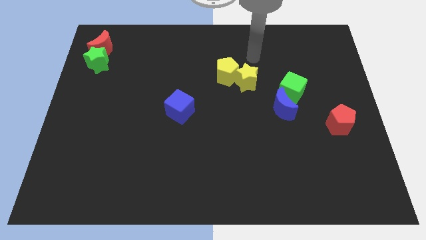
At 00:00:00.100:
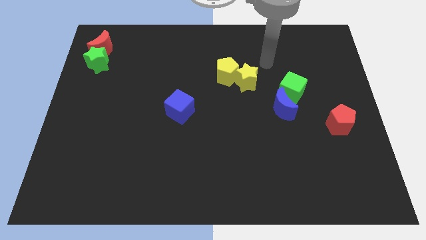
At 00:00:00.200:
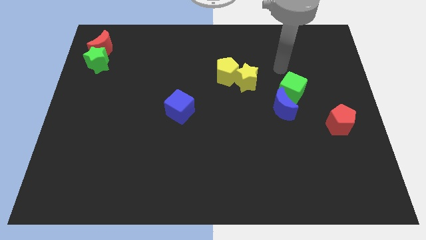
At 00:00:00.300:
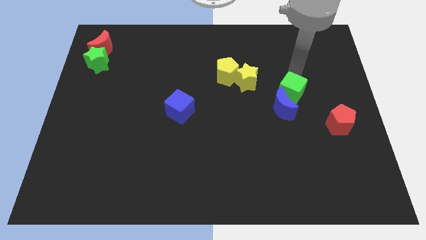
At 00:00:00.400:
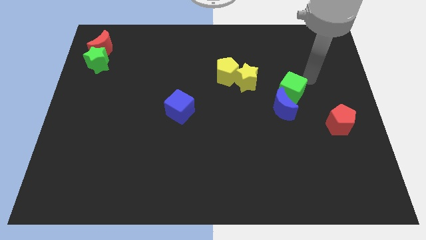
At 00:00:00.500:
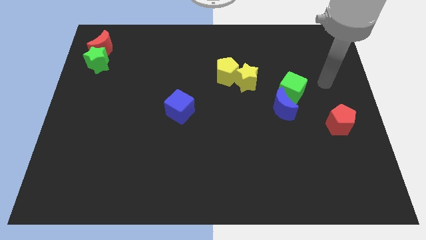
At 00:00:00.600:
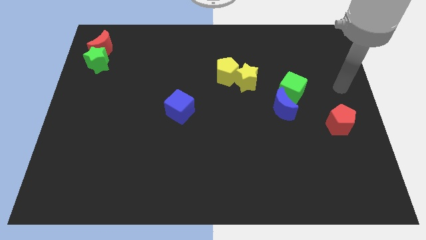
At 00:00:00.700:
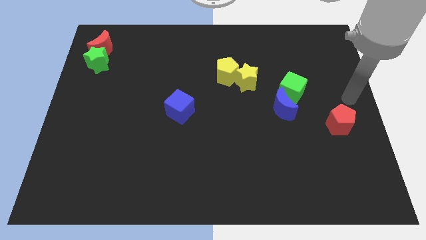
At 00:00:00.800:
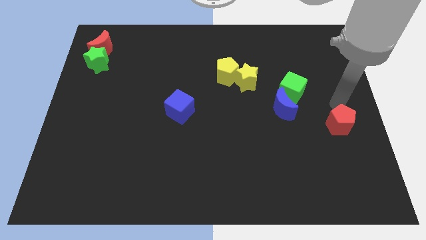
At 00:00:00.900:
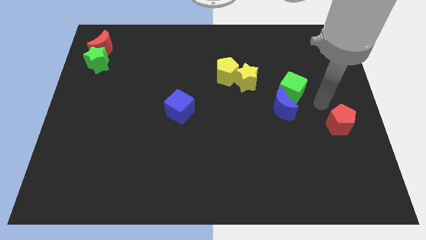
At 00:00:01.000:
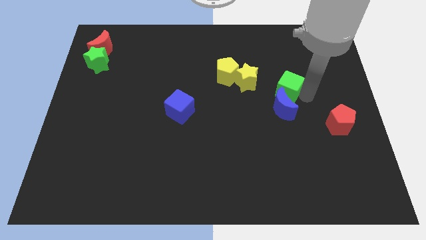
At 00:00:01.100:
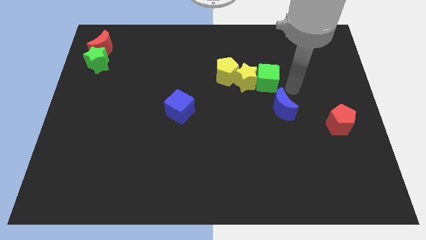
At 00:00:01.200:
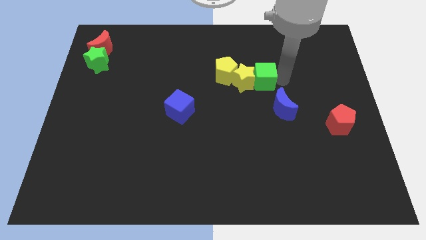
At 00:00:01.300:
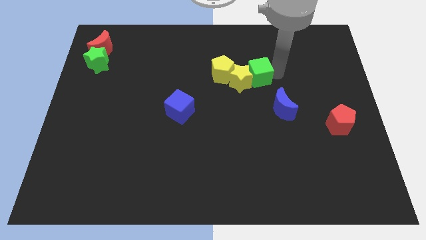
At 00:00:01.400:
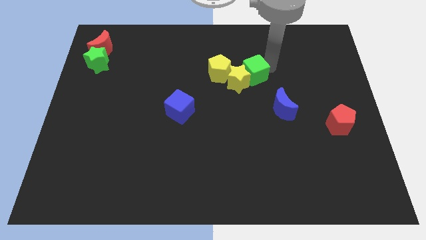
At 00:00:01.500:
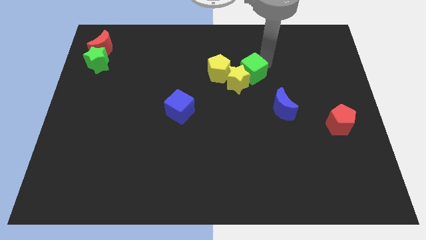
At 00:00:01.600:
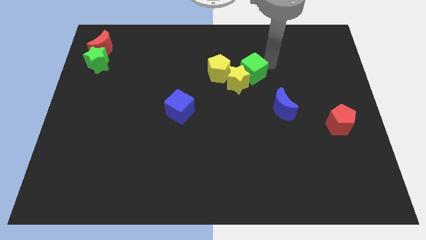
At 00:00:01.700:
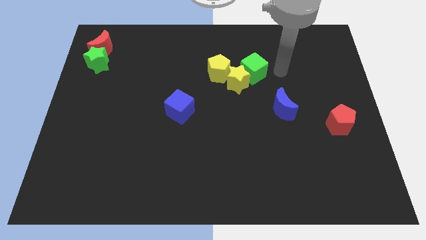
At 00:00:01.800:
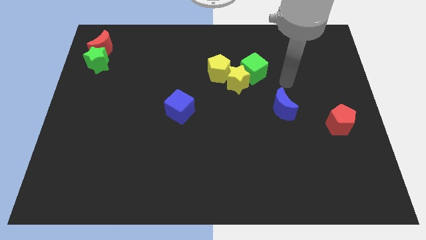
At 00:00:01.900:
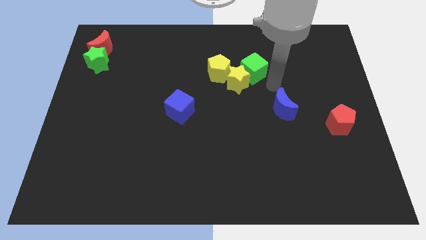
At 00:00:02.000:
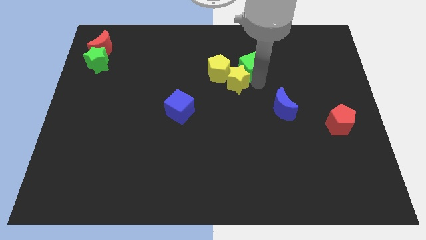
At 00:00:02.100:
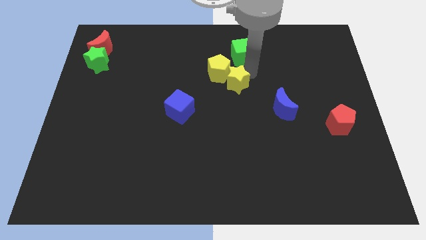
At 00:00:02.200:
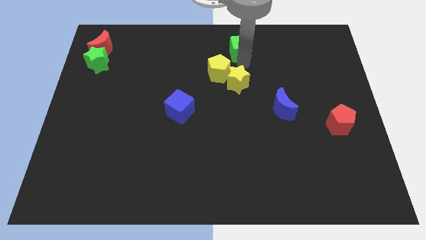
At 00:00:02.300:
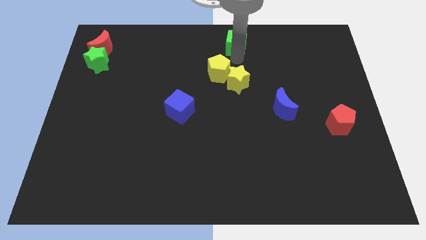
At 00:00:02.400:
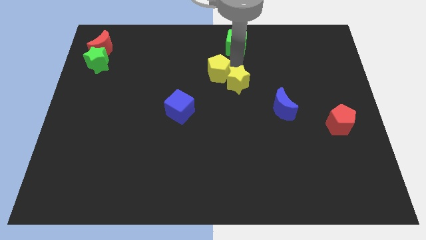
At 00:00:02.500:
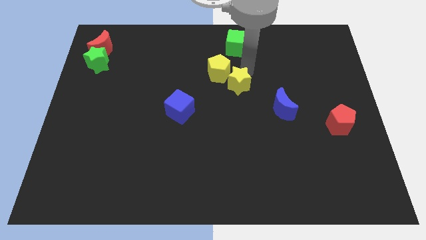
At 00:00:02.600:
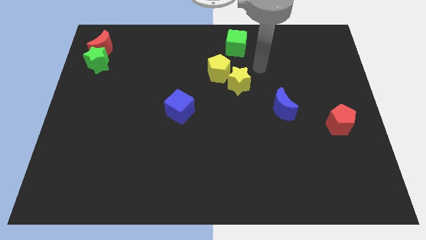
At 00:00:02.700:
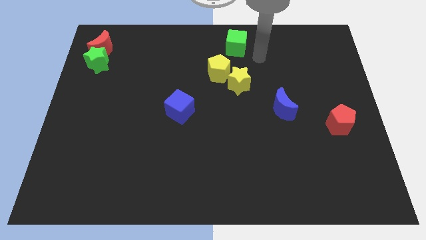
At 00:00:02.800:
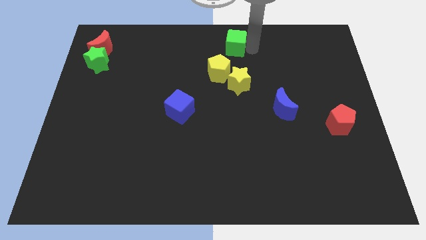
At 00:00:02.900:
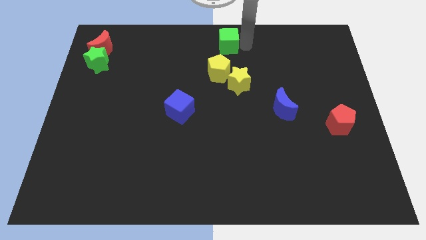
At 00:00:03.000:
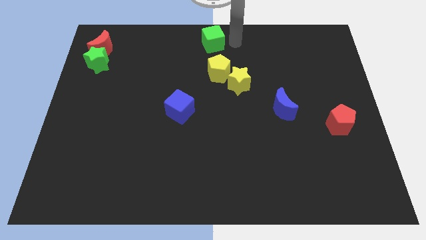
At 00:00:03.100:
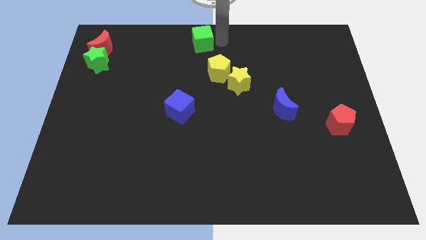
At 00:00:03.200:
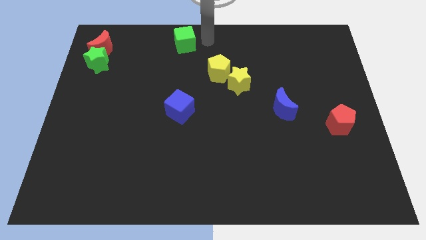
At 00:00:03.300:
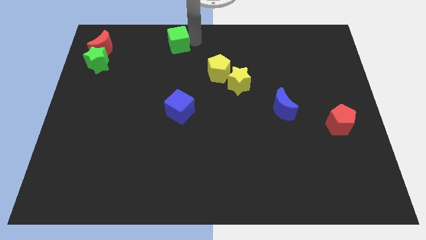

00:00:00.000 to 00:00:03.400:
push the green cube to the left of the red crescent

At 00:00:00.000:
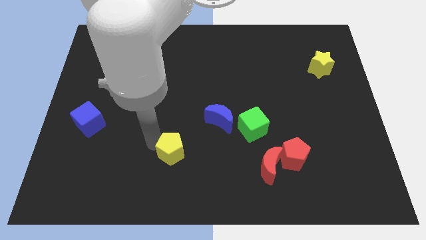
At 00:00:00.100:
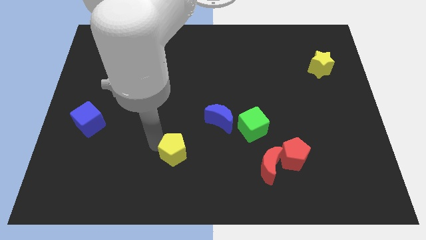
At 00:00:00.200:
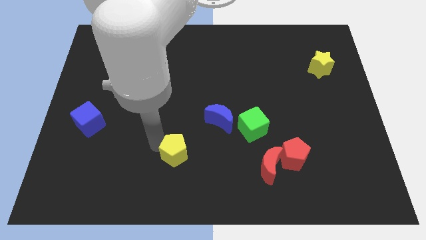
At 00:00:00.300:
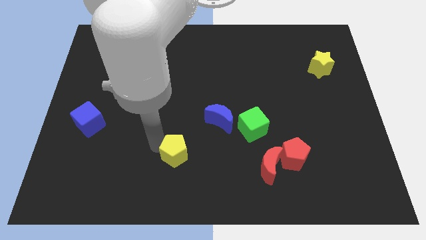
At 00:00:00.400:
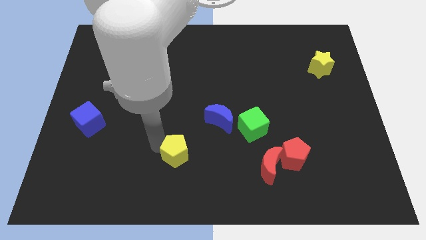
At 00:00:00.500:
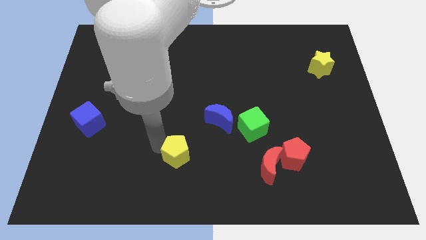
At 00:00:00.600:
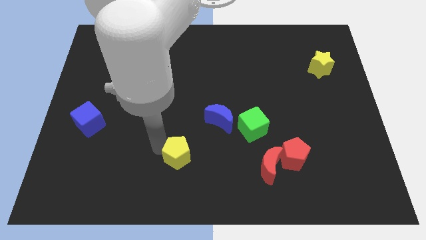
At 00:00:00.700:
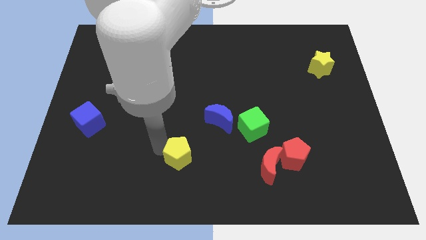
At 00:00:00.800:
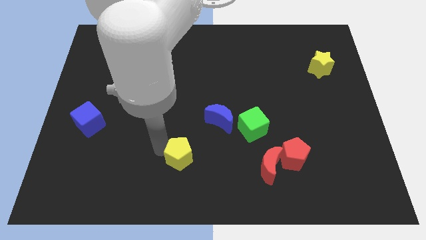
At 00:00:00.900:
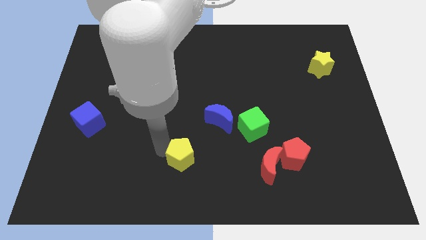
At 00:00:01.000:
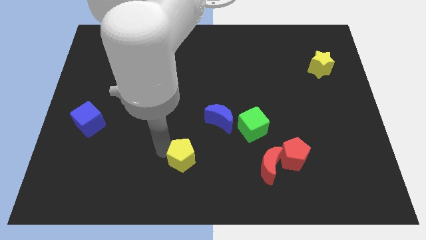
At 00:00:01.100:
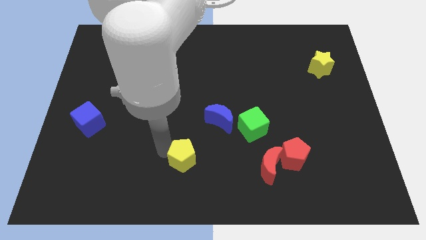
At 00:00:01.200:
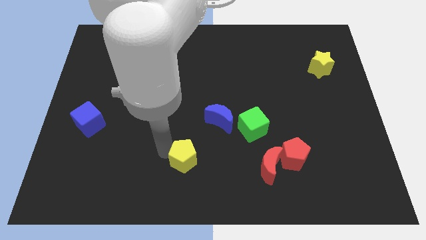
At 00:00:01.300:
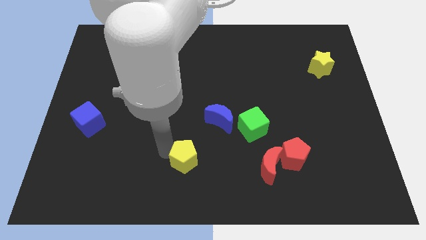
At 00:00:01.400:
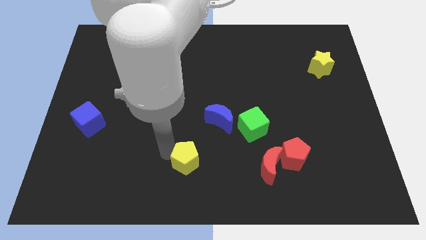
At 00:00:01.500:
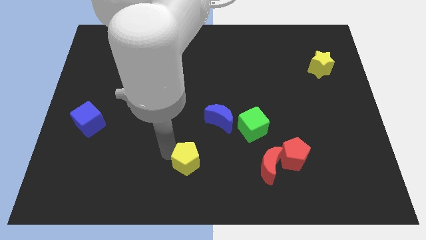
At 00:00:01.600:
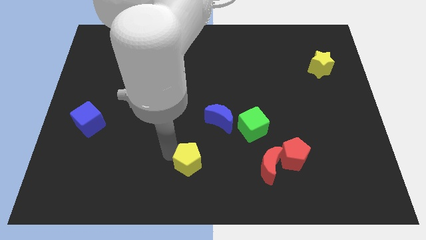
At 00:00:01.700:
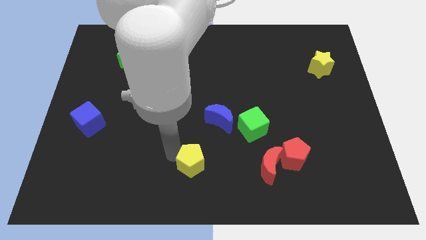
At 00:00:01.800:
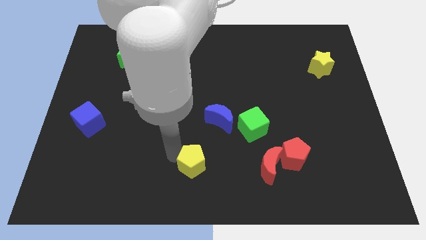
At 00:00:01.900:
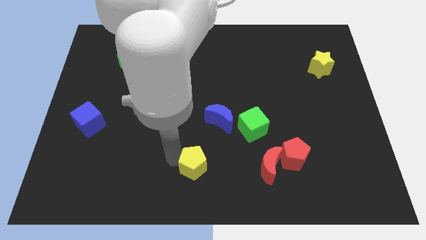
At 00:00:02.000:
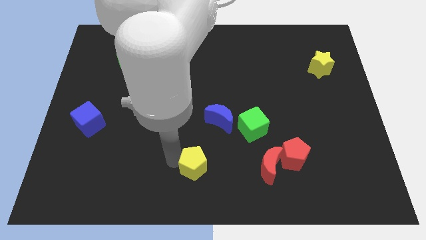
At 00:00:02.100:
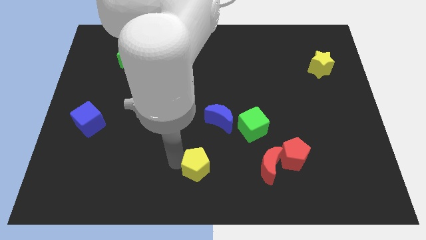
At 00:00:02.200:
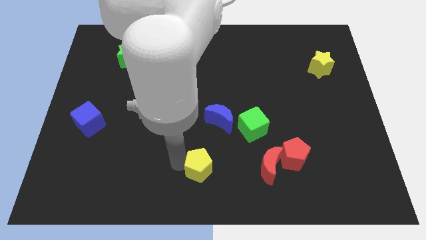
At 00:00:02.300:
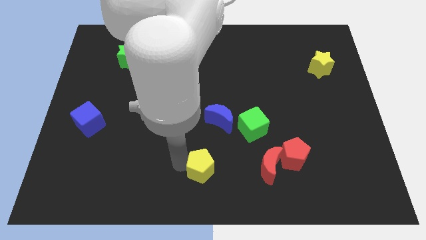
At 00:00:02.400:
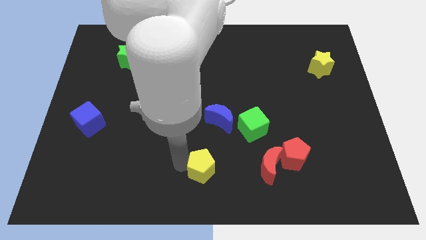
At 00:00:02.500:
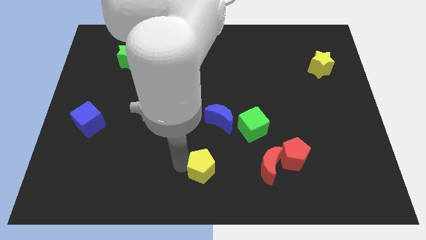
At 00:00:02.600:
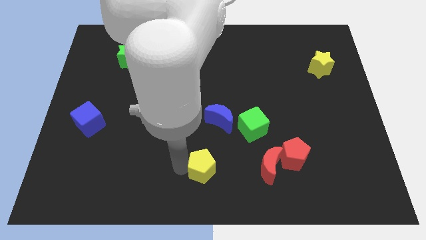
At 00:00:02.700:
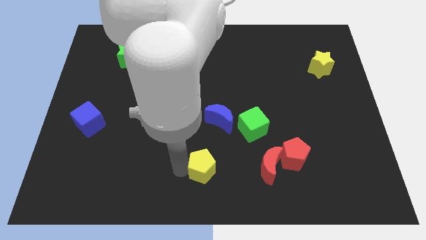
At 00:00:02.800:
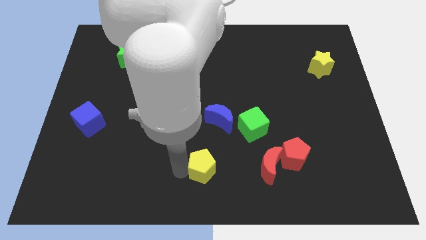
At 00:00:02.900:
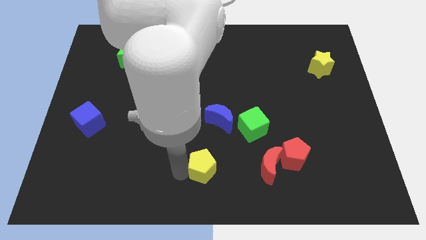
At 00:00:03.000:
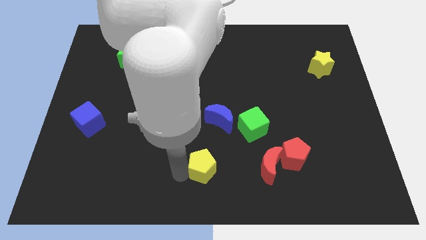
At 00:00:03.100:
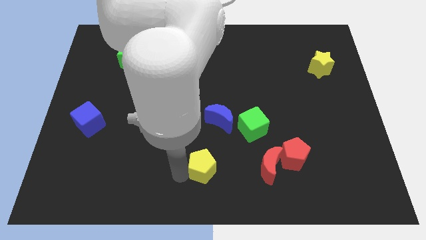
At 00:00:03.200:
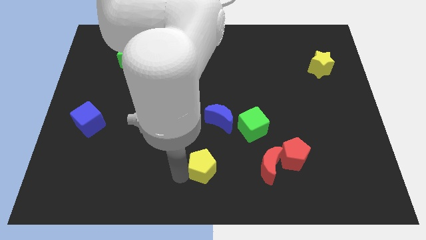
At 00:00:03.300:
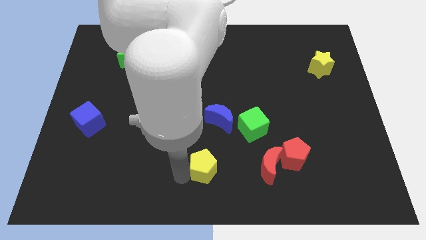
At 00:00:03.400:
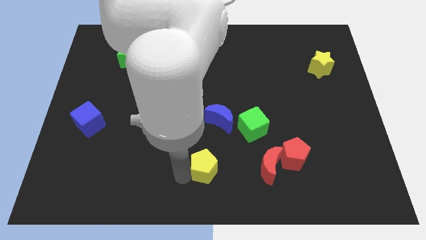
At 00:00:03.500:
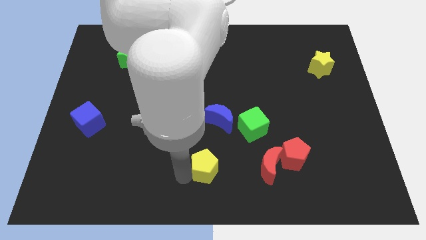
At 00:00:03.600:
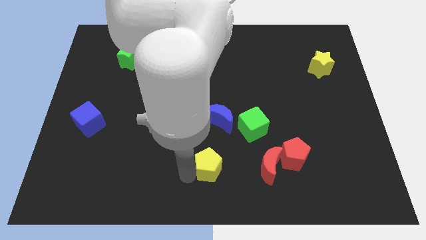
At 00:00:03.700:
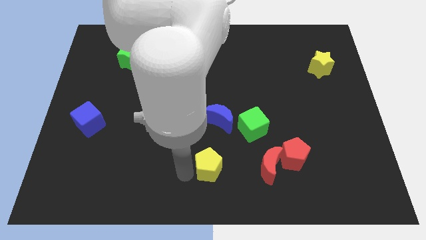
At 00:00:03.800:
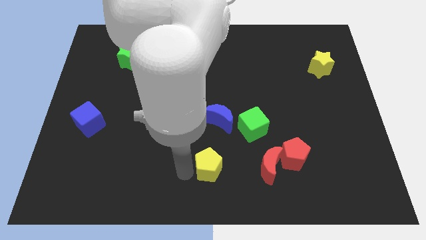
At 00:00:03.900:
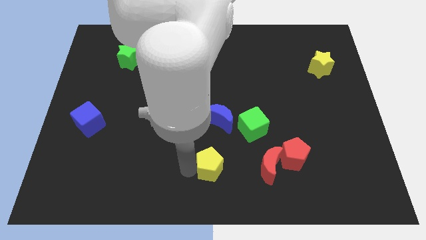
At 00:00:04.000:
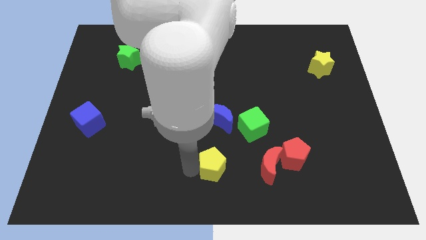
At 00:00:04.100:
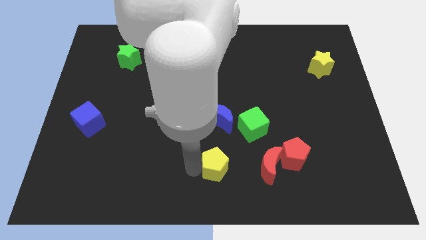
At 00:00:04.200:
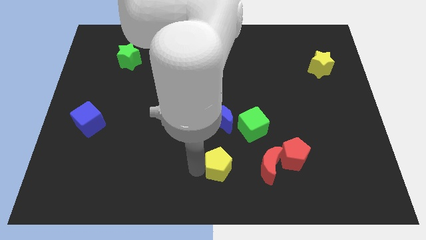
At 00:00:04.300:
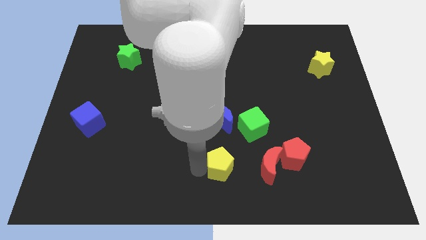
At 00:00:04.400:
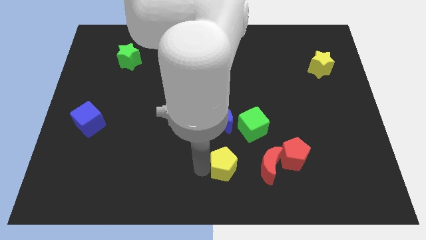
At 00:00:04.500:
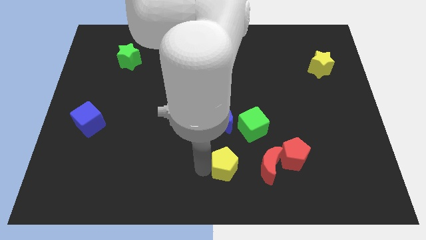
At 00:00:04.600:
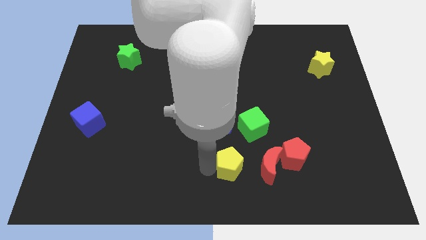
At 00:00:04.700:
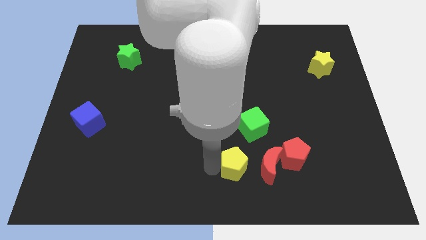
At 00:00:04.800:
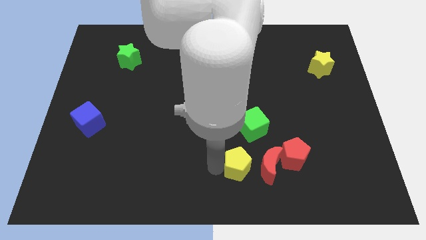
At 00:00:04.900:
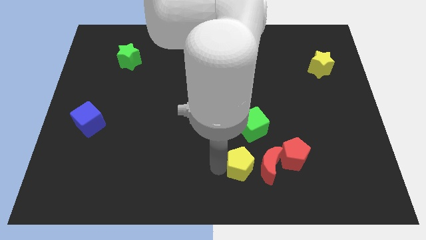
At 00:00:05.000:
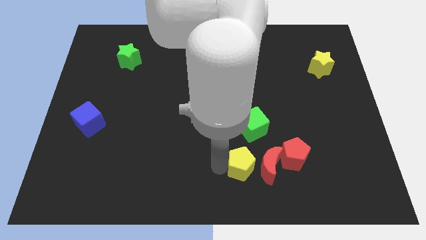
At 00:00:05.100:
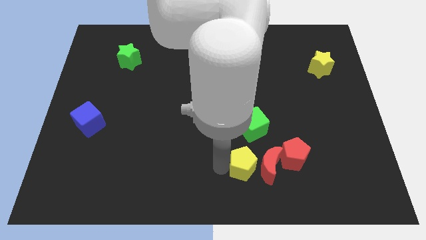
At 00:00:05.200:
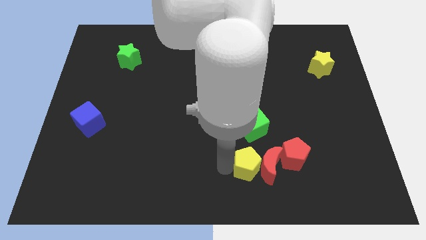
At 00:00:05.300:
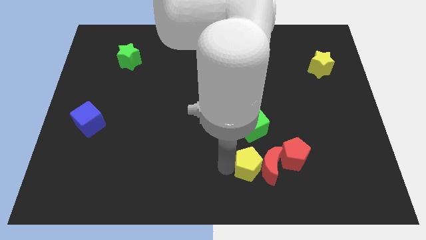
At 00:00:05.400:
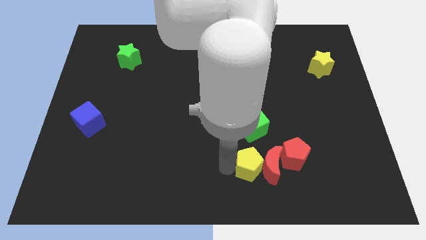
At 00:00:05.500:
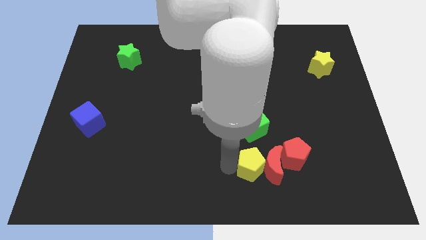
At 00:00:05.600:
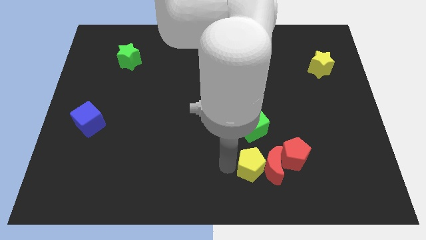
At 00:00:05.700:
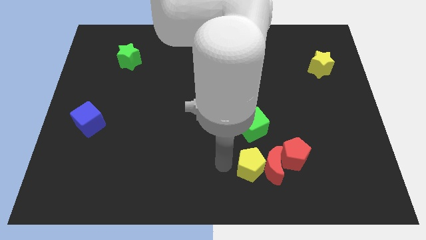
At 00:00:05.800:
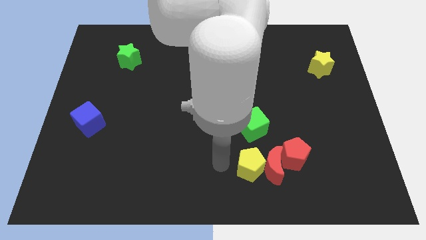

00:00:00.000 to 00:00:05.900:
move the yellow pentagon into the red moon
